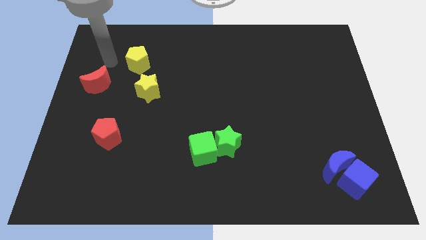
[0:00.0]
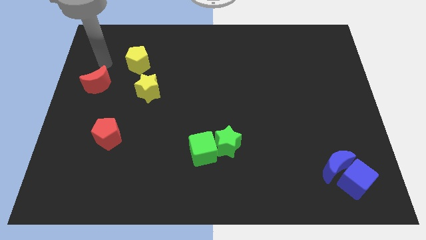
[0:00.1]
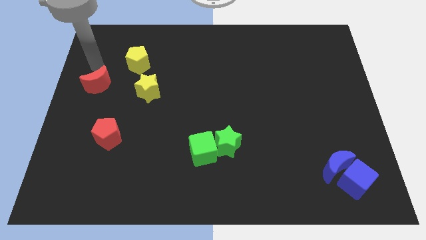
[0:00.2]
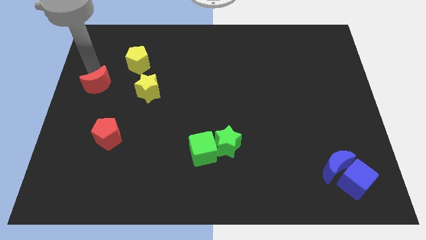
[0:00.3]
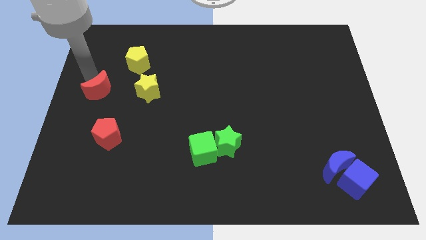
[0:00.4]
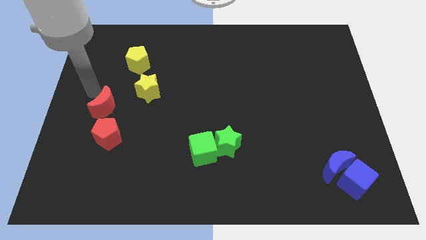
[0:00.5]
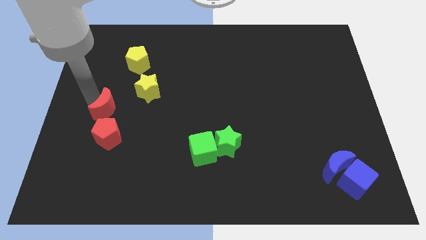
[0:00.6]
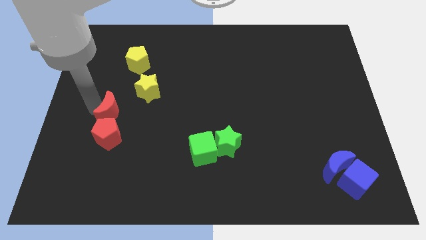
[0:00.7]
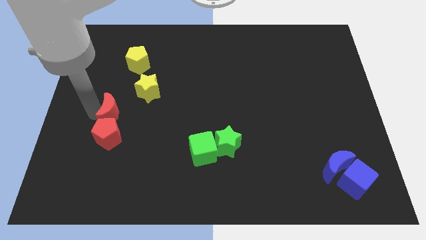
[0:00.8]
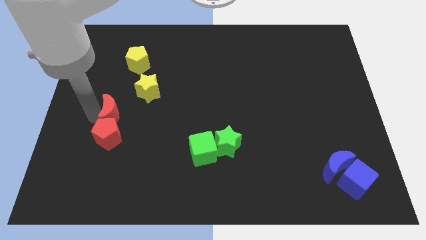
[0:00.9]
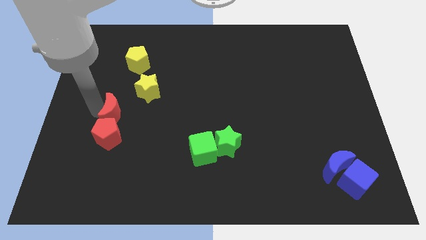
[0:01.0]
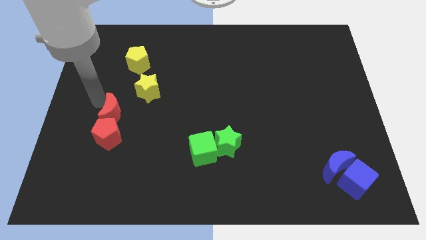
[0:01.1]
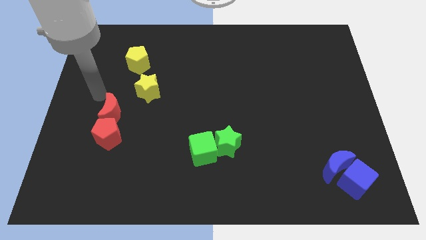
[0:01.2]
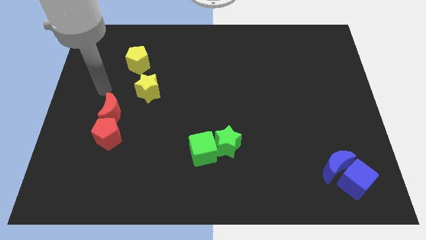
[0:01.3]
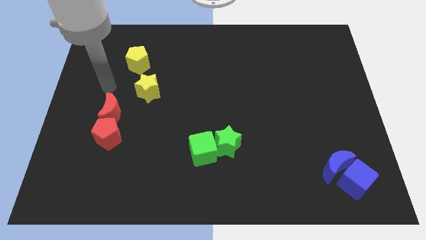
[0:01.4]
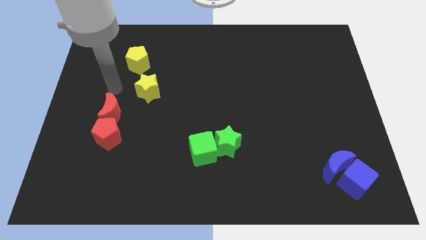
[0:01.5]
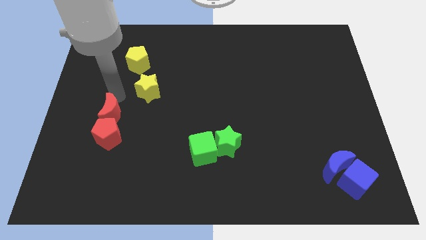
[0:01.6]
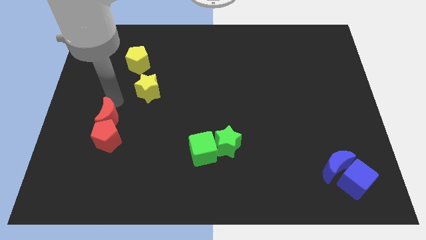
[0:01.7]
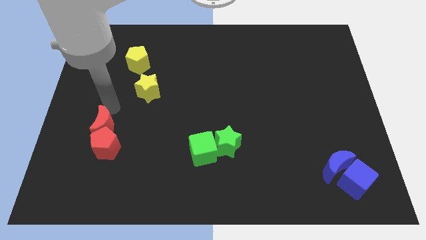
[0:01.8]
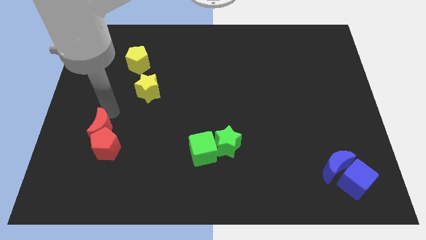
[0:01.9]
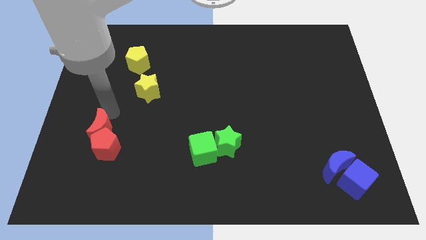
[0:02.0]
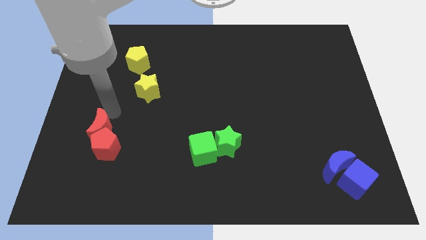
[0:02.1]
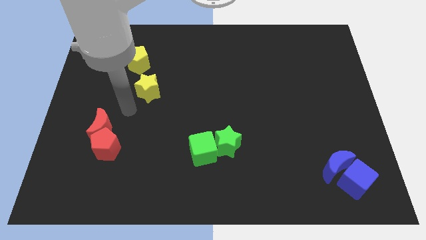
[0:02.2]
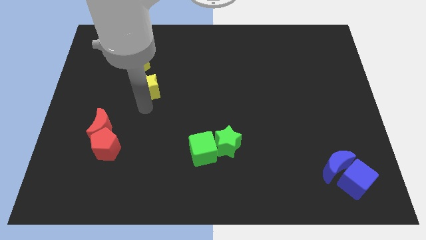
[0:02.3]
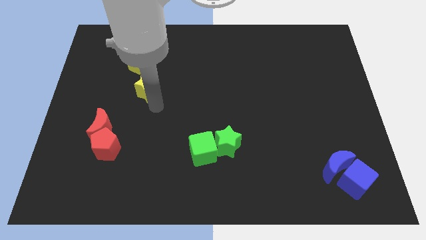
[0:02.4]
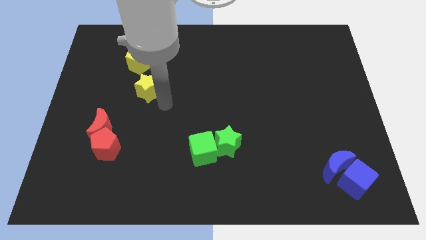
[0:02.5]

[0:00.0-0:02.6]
move red crescent above the red pentagon

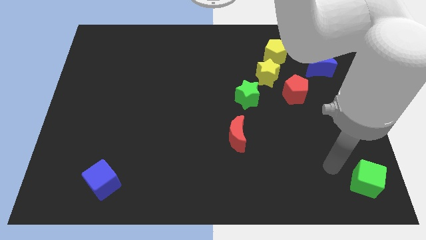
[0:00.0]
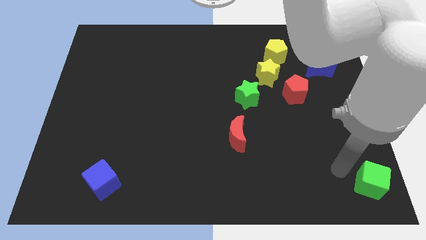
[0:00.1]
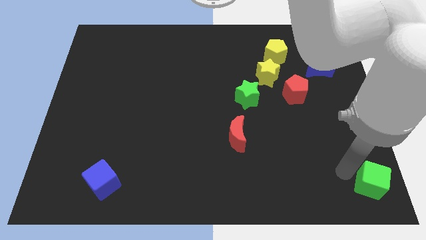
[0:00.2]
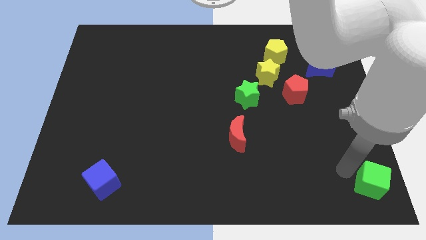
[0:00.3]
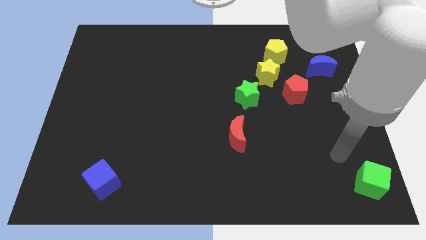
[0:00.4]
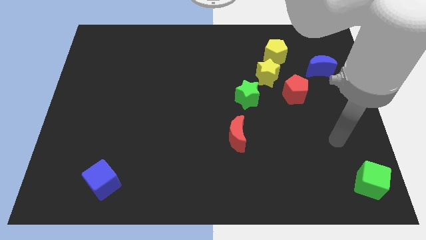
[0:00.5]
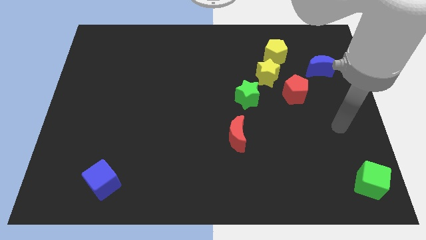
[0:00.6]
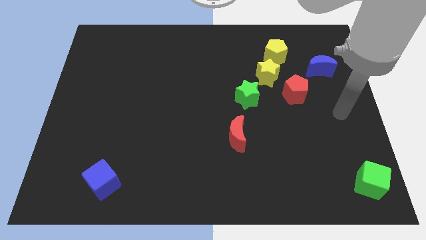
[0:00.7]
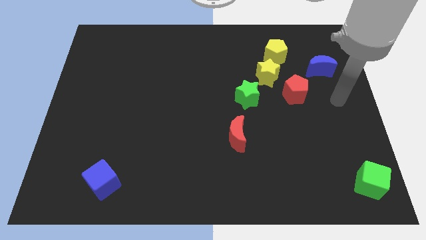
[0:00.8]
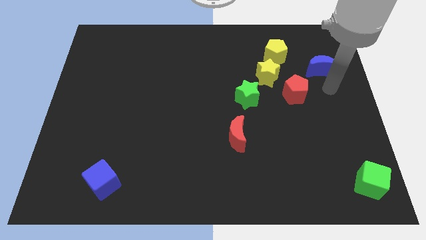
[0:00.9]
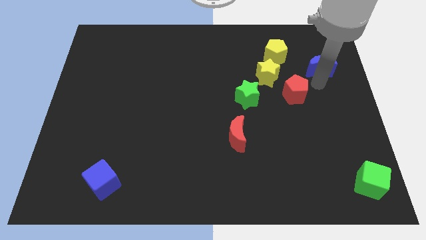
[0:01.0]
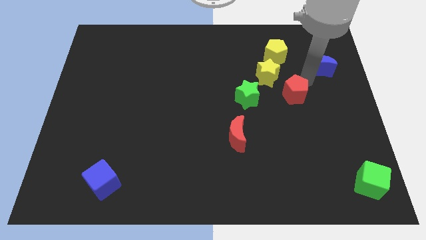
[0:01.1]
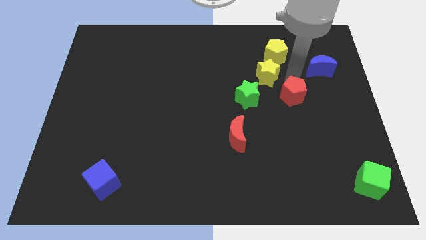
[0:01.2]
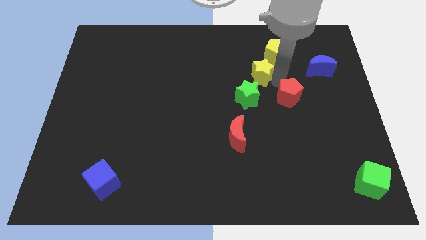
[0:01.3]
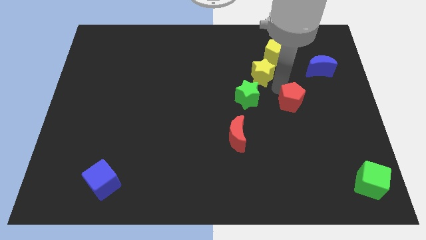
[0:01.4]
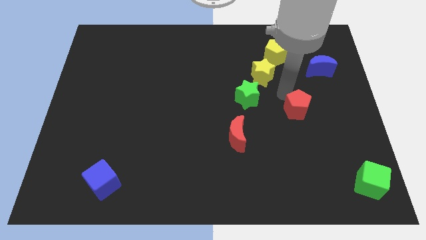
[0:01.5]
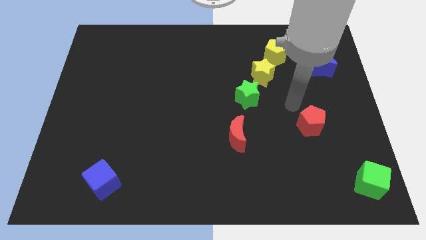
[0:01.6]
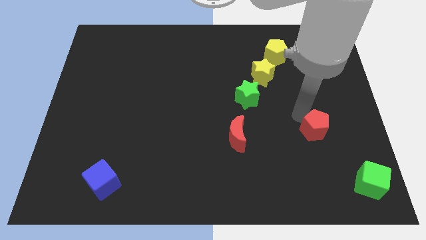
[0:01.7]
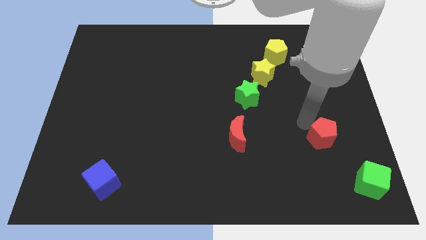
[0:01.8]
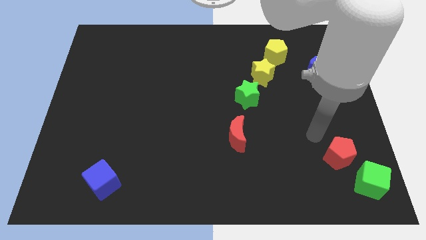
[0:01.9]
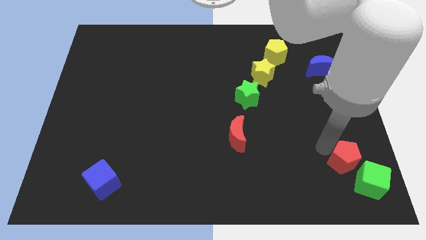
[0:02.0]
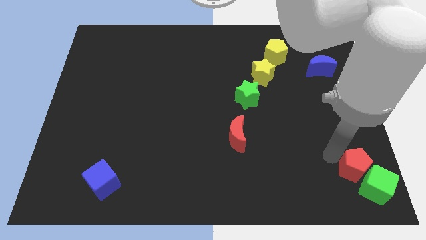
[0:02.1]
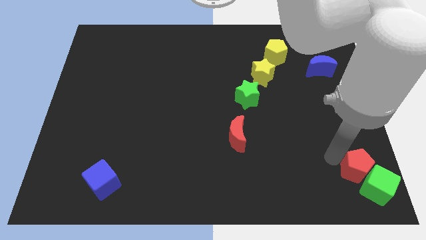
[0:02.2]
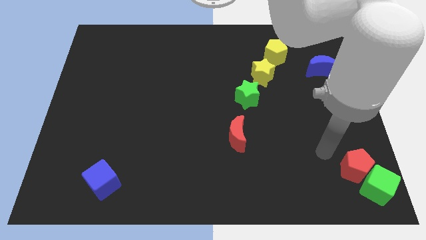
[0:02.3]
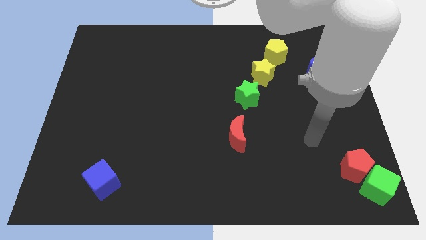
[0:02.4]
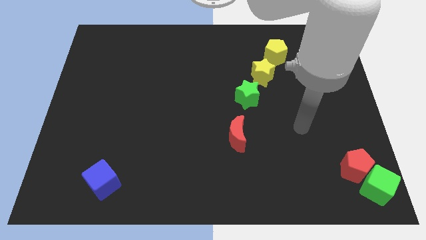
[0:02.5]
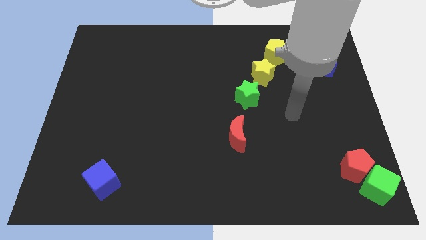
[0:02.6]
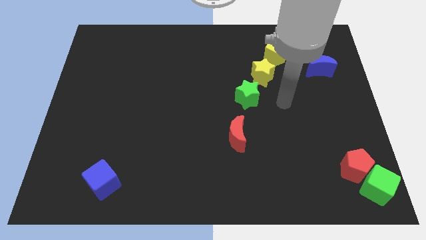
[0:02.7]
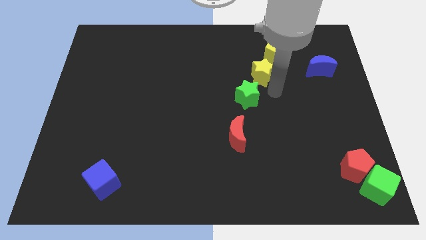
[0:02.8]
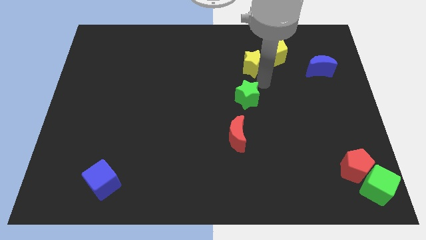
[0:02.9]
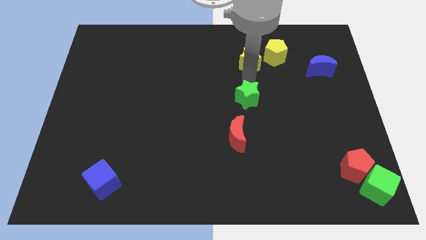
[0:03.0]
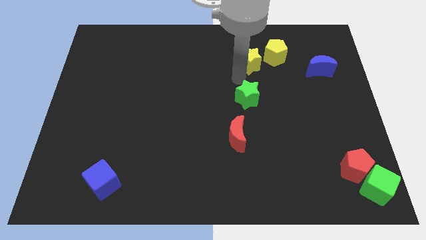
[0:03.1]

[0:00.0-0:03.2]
move the red pentagon to the left side of the green cube

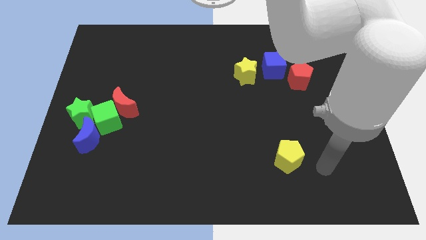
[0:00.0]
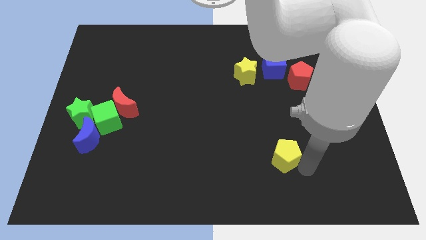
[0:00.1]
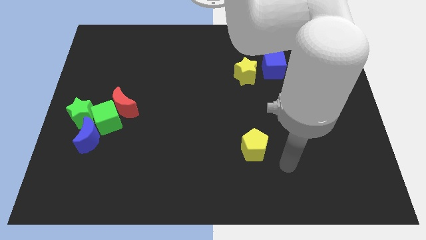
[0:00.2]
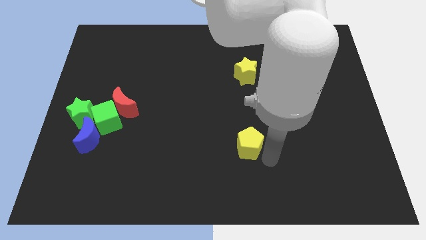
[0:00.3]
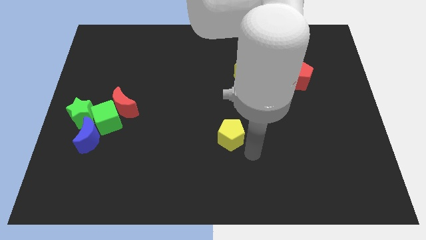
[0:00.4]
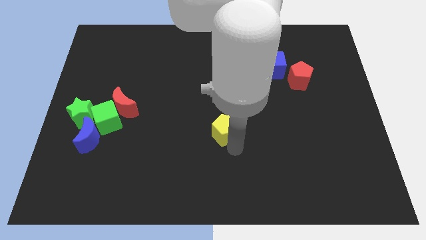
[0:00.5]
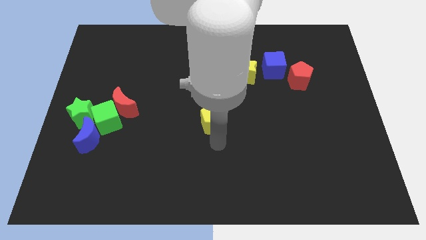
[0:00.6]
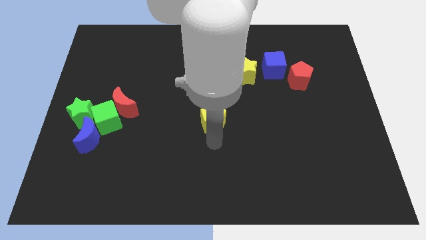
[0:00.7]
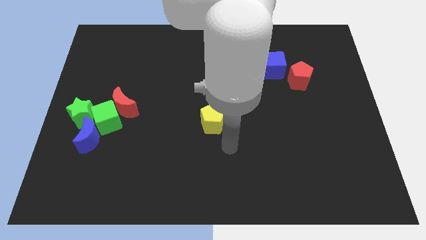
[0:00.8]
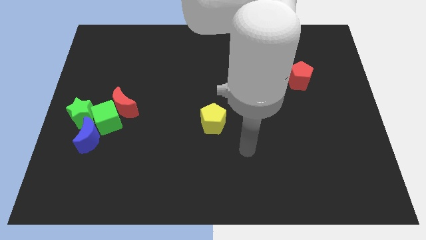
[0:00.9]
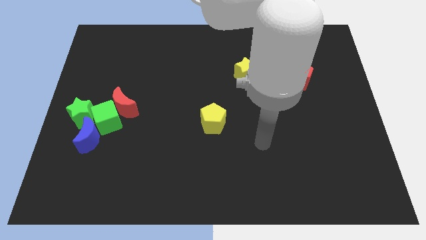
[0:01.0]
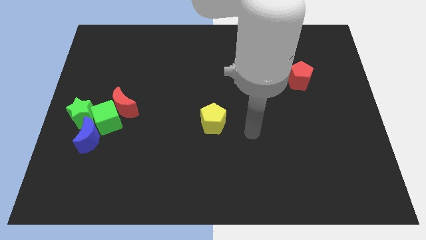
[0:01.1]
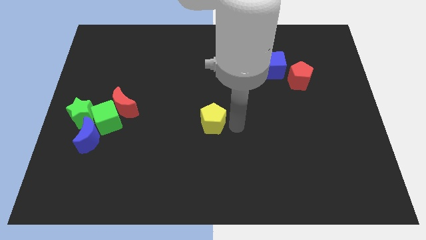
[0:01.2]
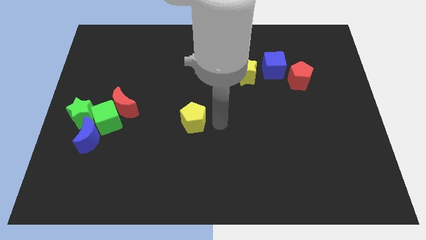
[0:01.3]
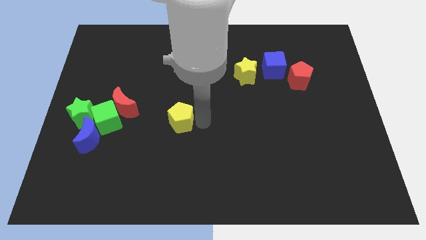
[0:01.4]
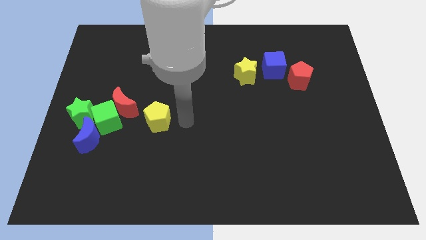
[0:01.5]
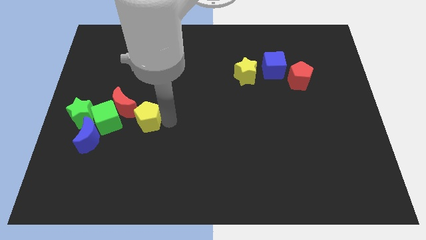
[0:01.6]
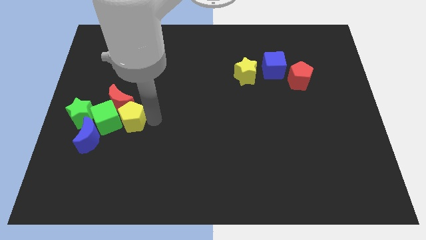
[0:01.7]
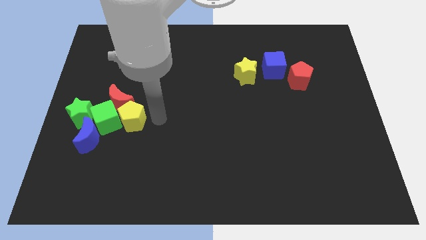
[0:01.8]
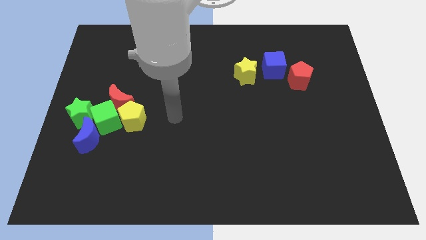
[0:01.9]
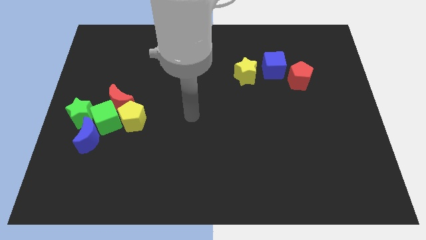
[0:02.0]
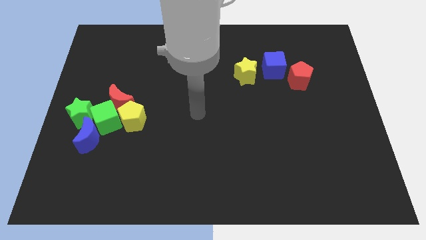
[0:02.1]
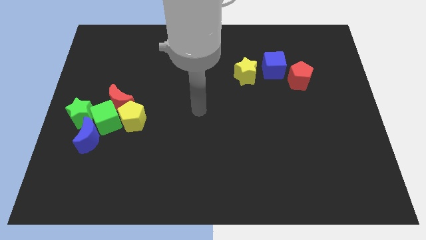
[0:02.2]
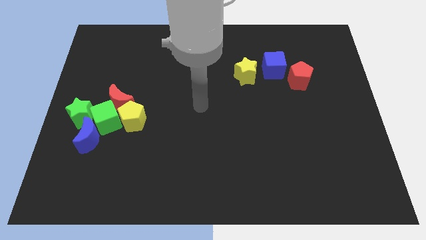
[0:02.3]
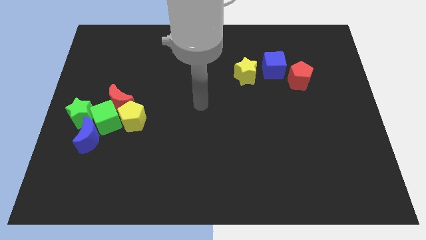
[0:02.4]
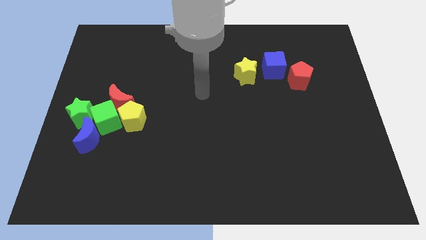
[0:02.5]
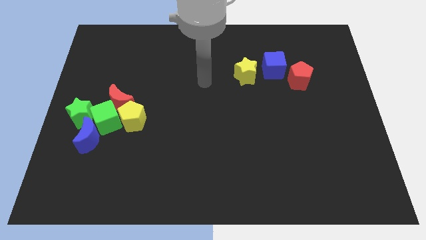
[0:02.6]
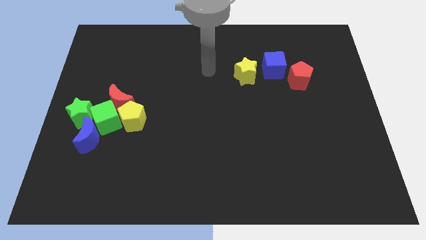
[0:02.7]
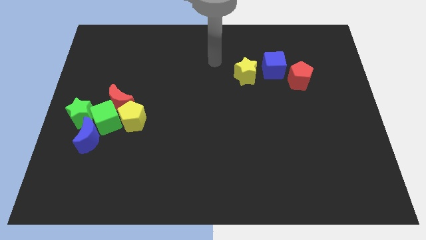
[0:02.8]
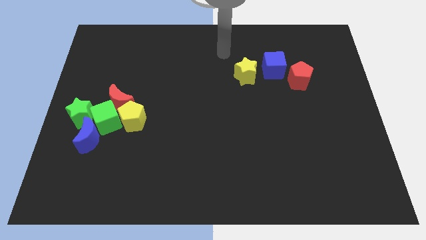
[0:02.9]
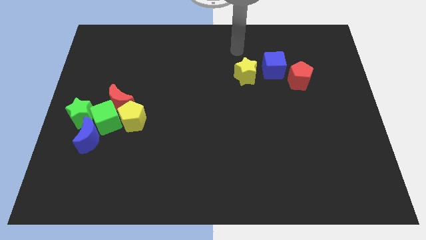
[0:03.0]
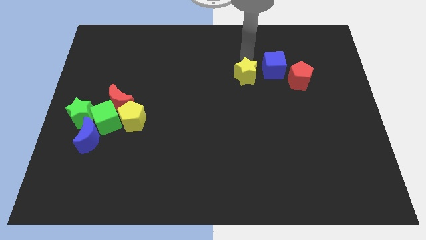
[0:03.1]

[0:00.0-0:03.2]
drag the yellow pentagon to the right of the green cube

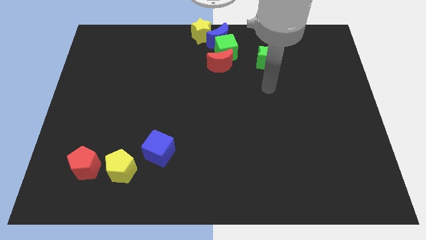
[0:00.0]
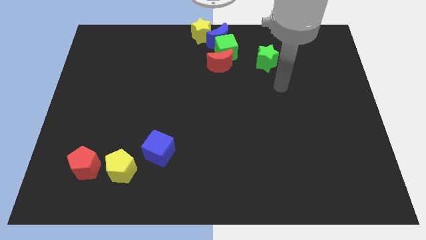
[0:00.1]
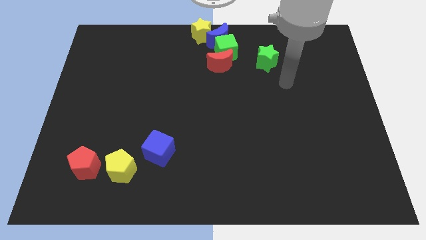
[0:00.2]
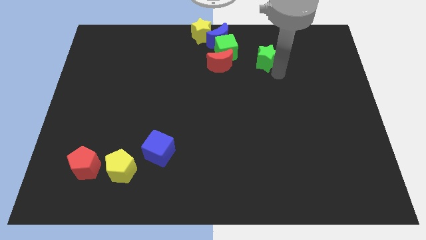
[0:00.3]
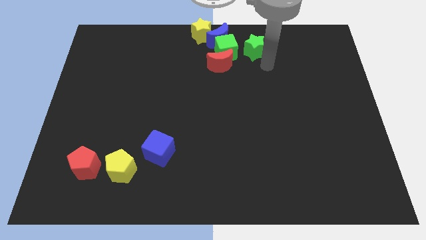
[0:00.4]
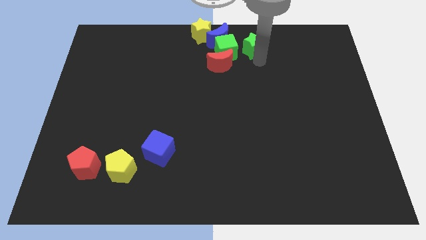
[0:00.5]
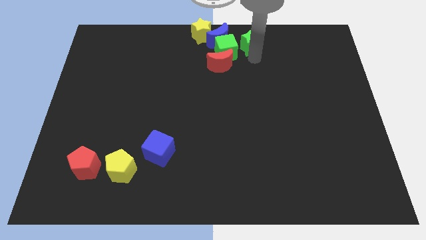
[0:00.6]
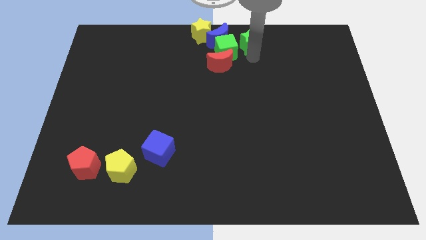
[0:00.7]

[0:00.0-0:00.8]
move the green star right to the green cube
